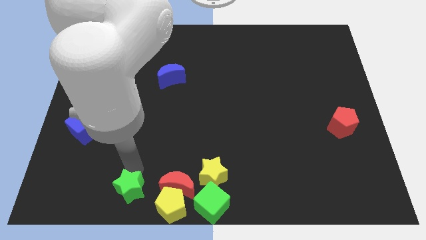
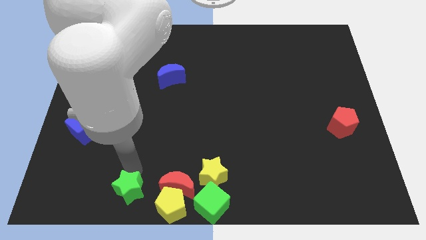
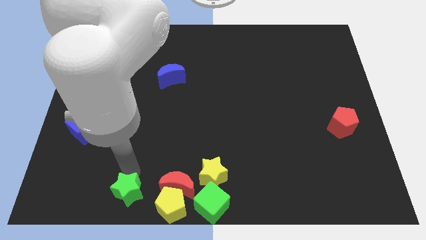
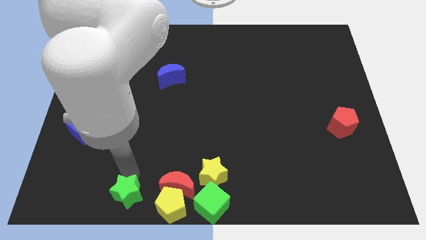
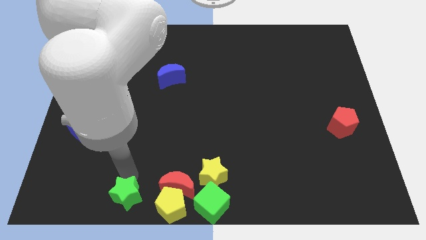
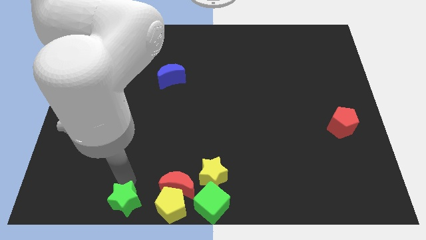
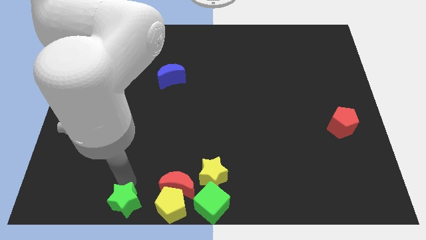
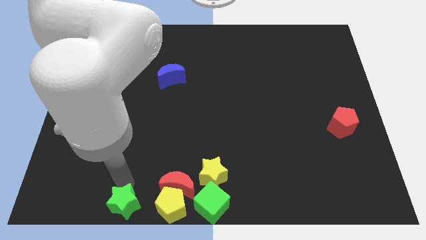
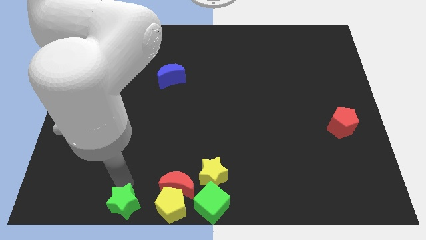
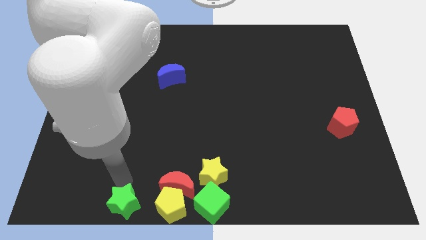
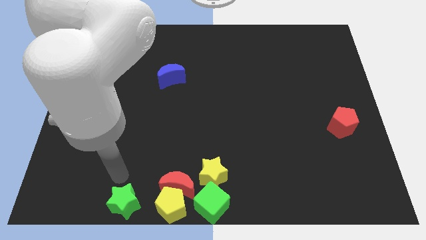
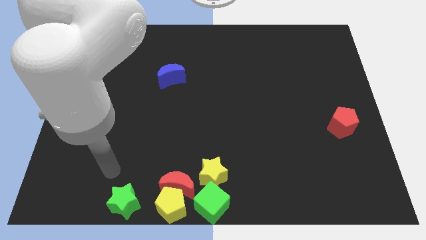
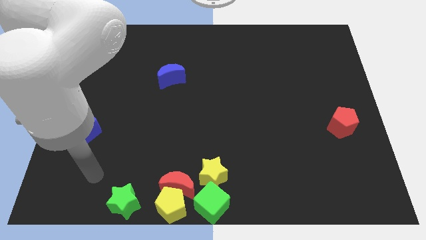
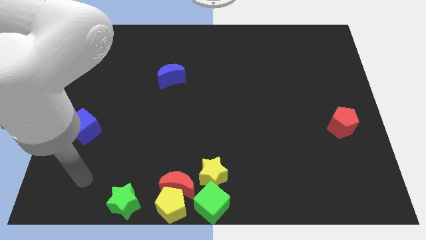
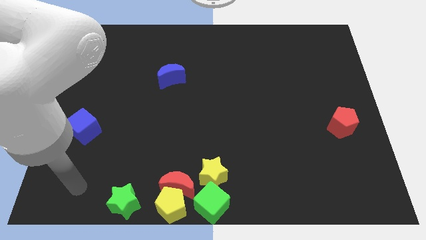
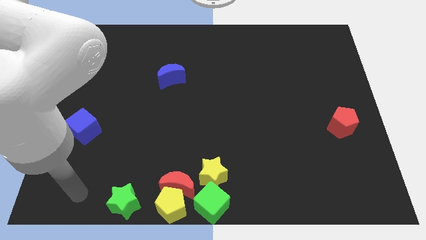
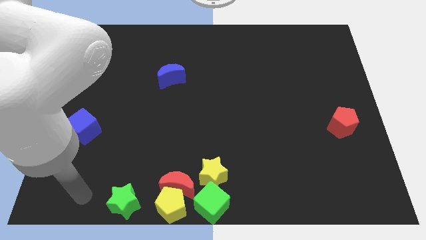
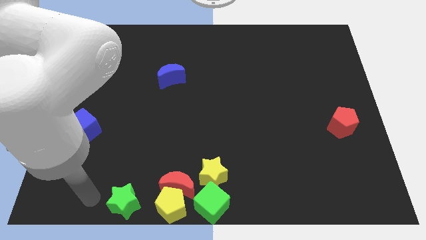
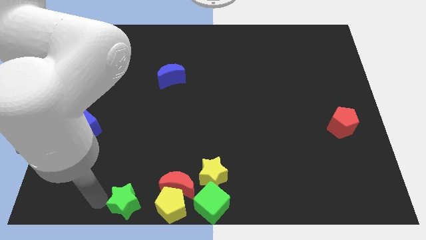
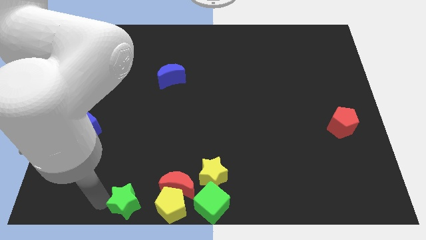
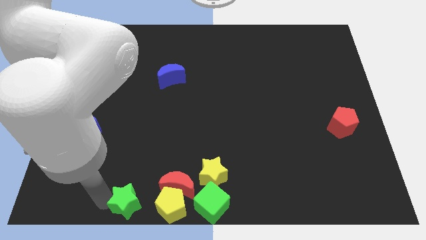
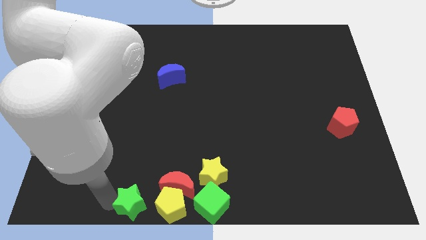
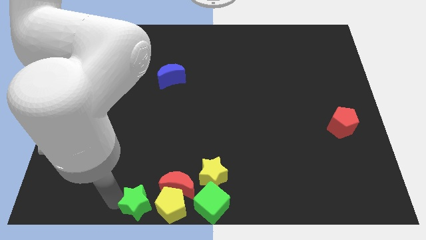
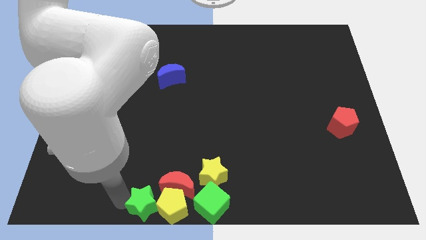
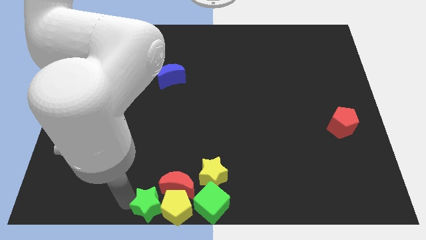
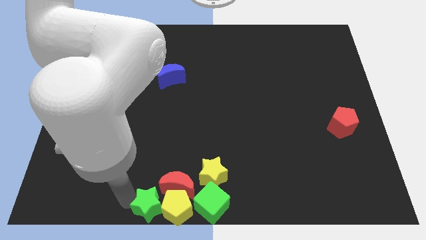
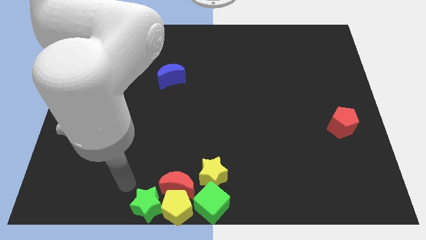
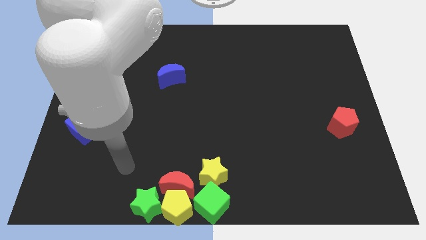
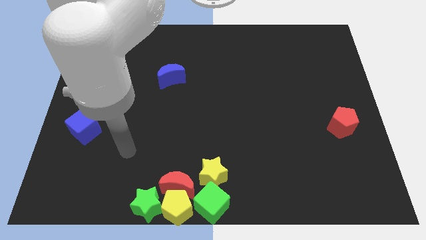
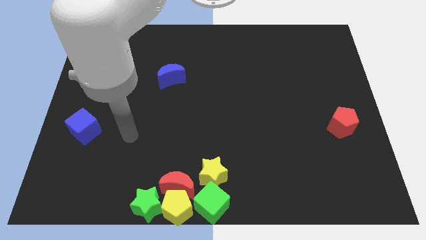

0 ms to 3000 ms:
push the green star into the left side of the yellow pentagon

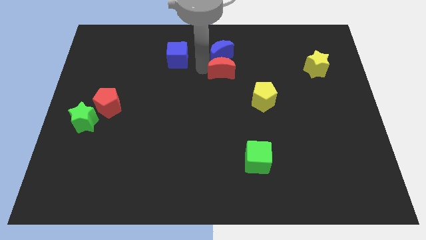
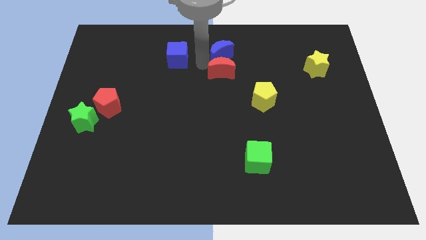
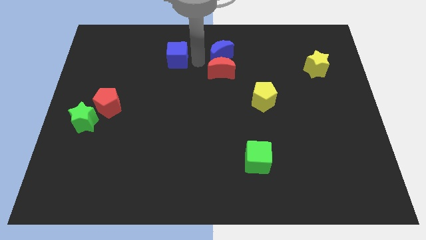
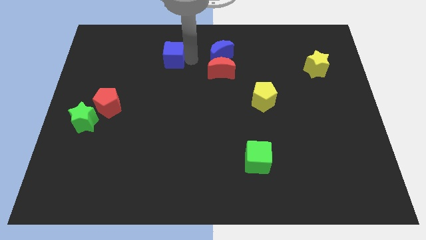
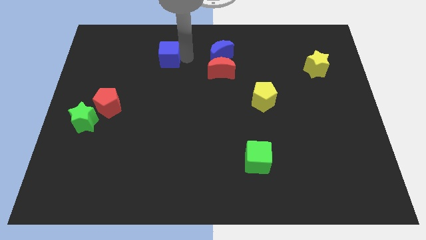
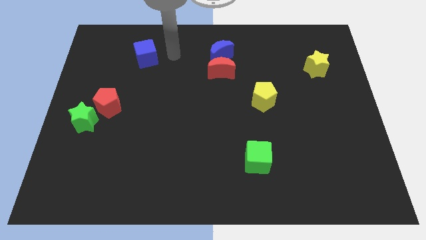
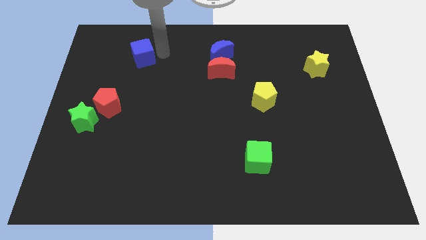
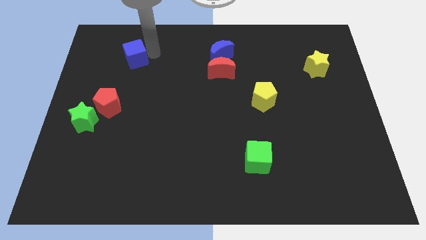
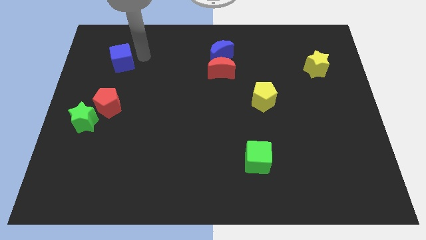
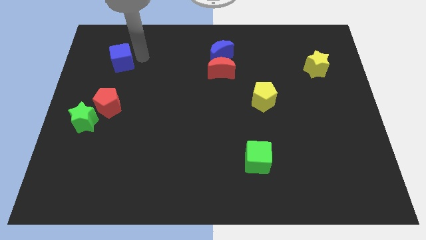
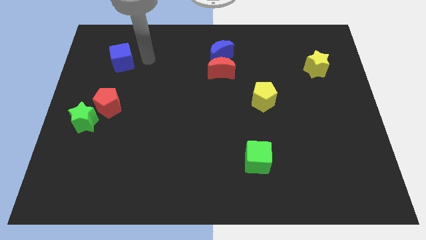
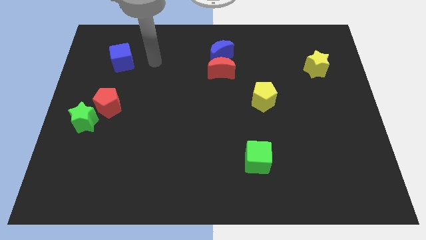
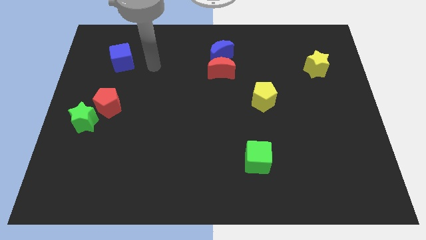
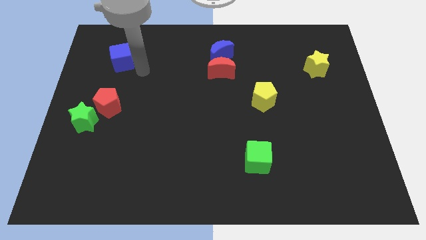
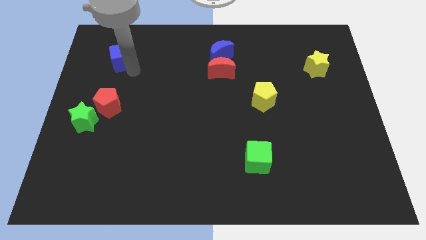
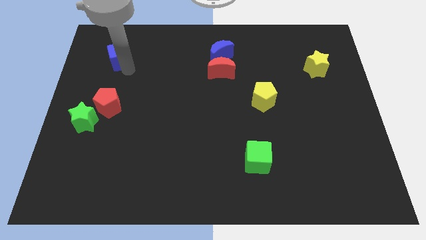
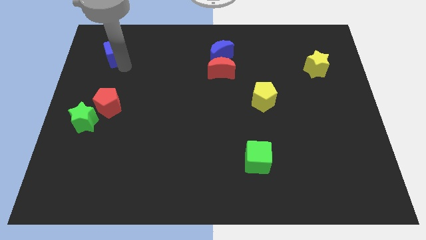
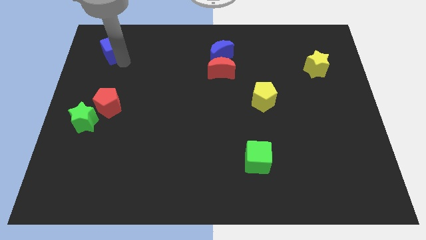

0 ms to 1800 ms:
move the blue cube to the top of the red pentagon

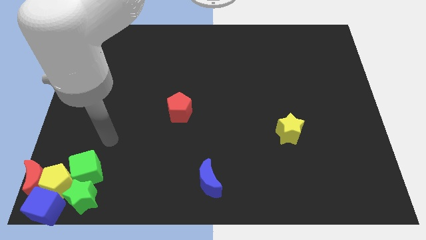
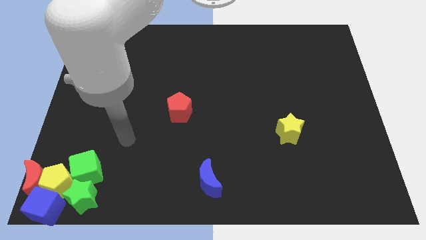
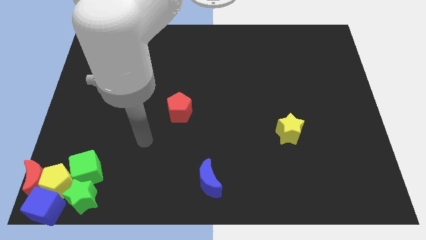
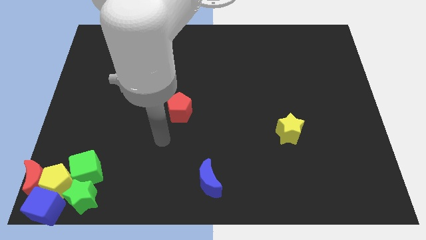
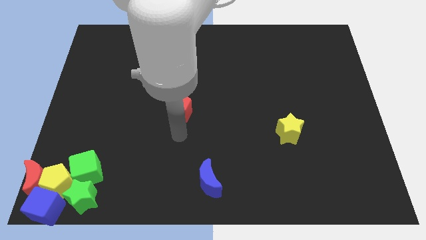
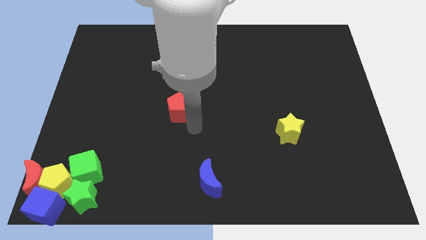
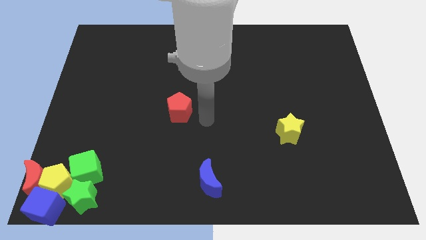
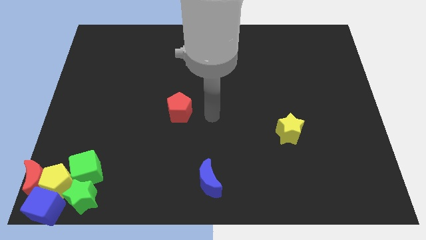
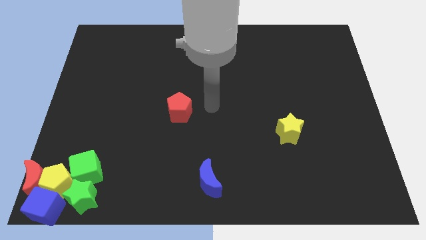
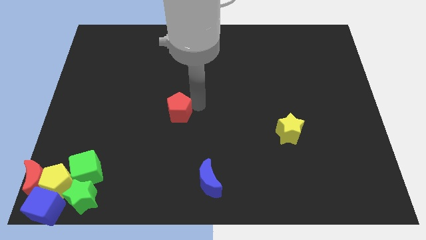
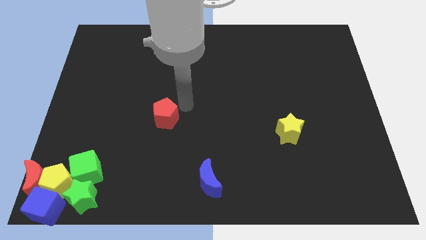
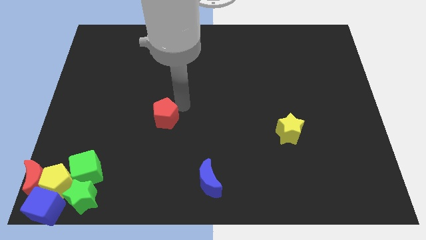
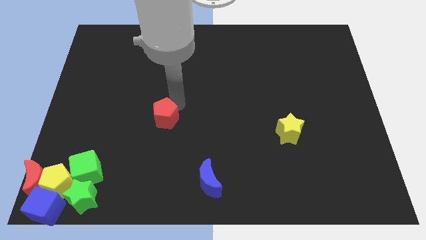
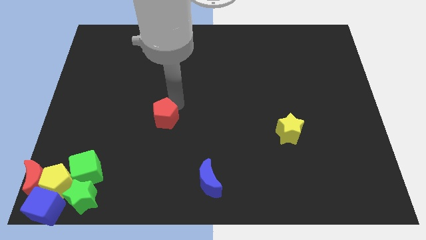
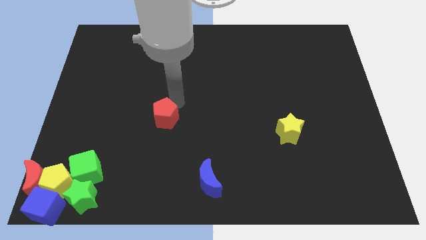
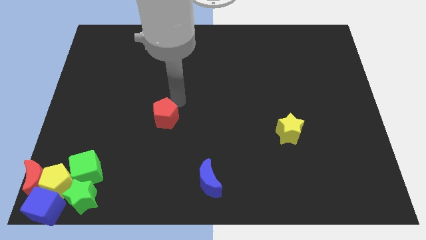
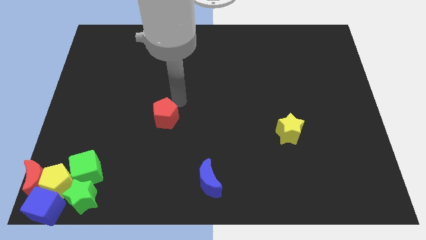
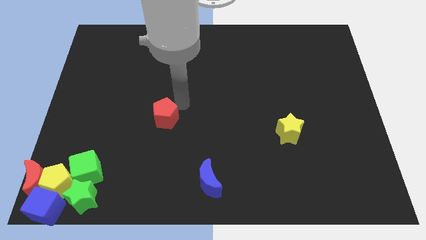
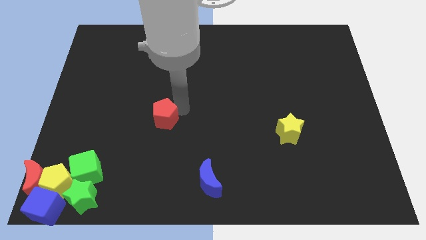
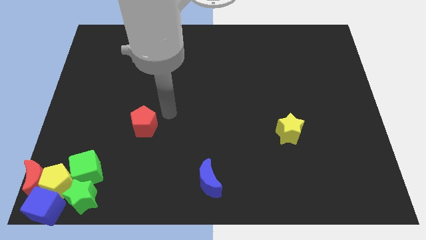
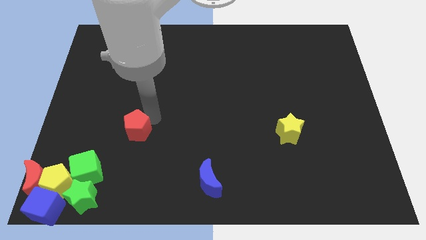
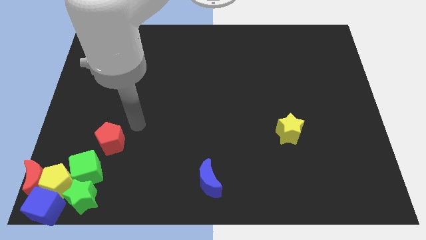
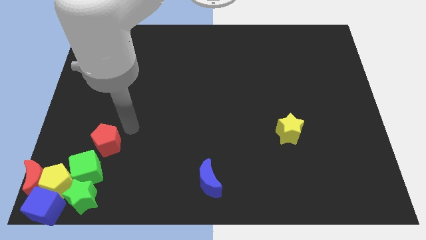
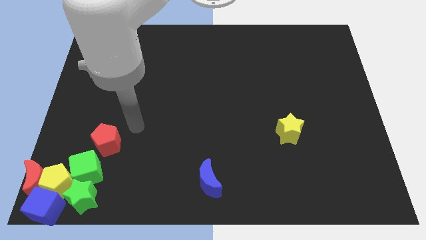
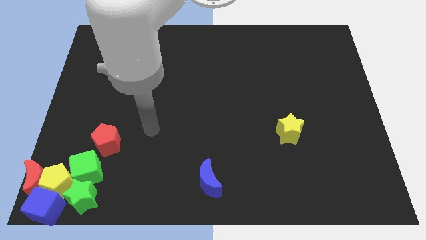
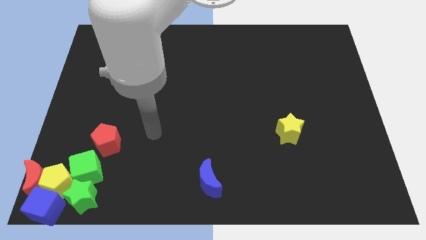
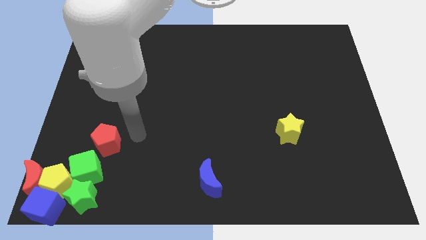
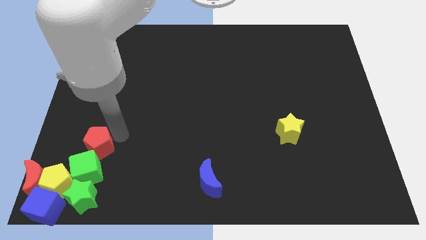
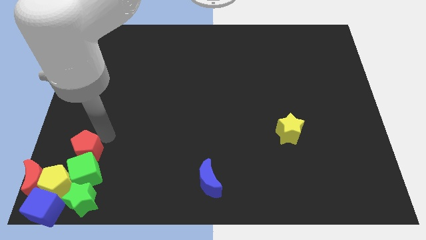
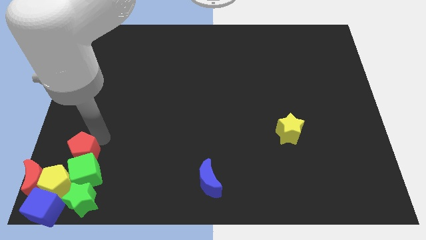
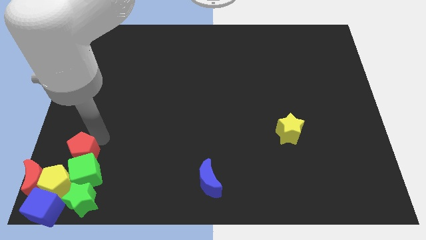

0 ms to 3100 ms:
place the red pentagon above the green cube

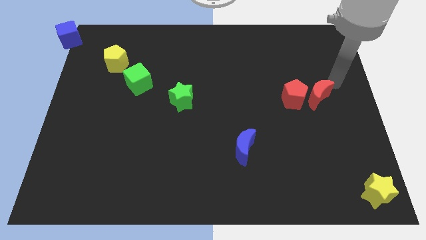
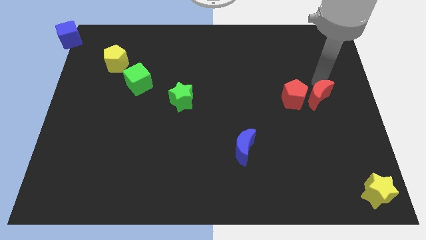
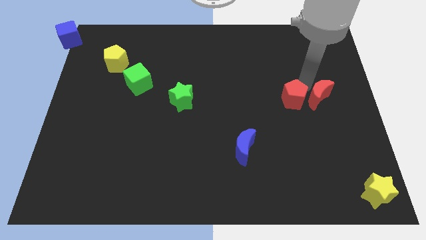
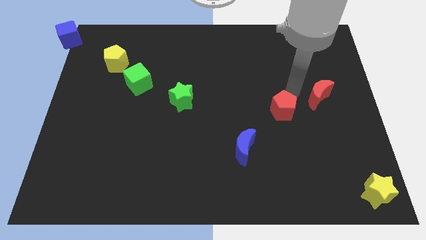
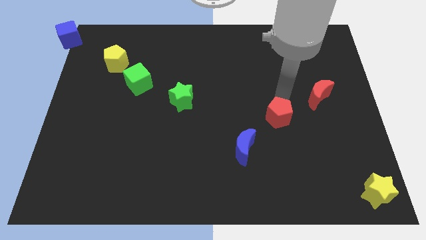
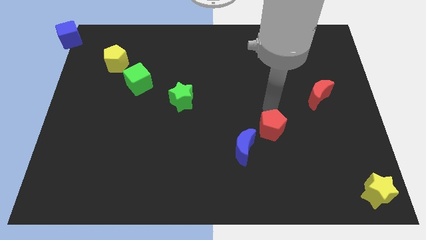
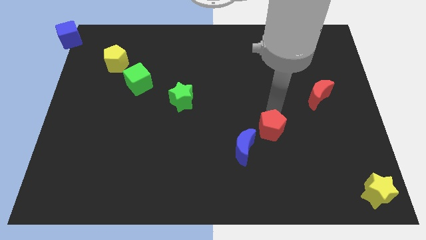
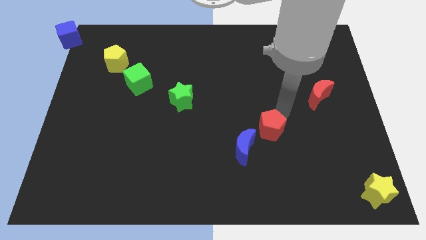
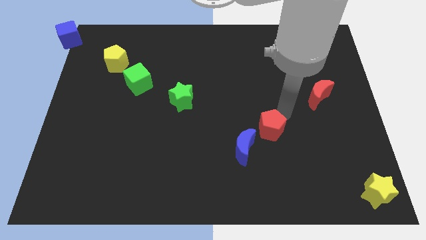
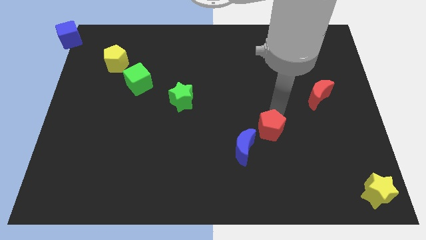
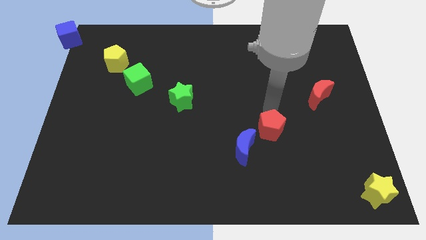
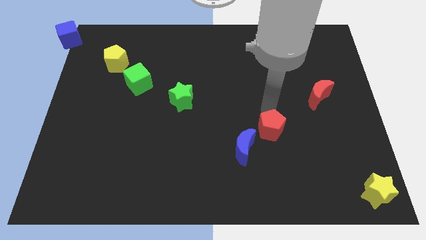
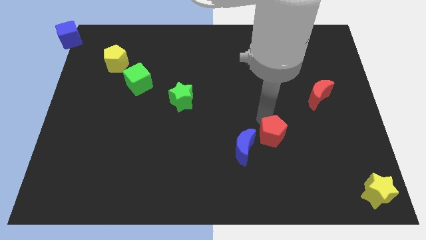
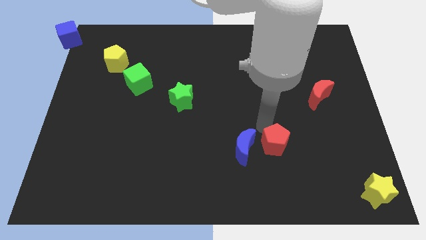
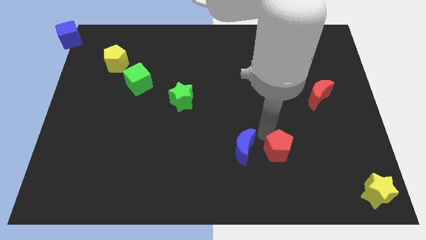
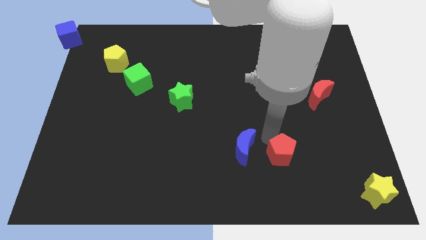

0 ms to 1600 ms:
push the red pentagon to the right of the blue crescent
